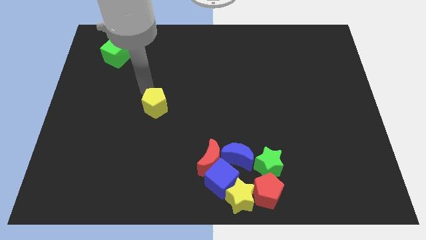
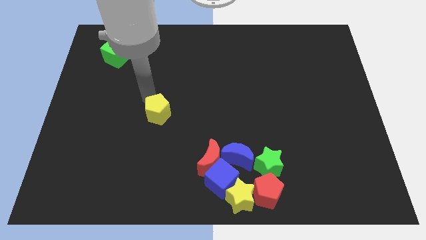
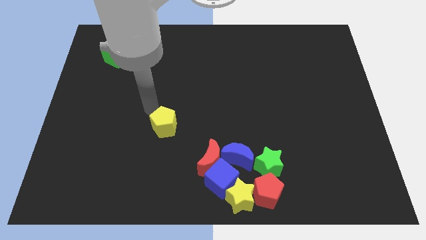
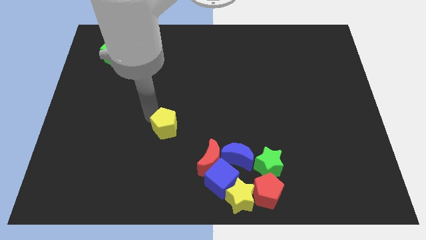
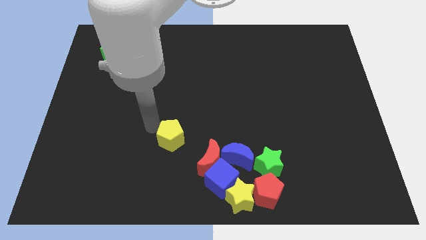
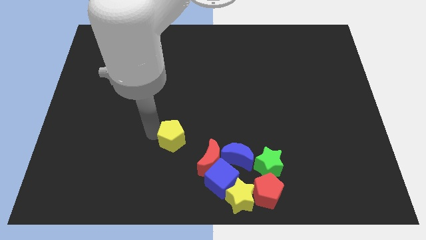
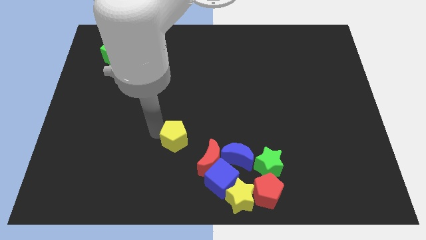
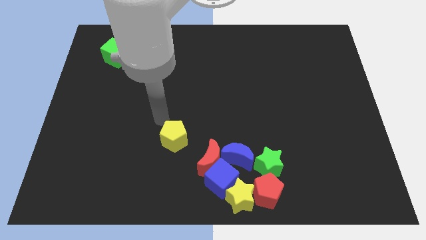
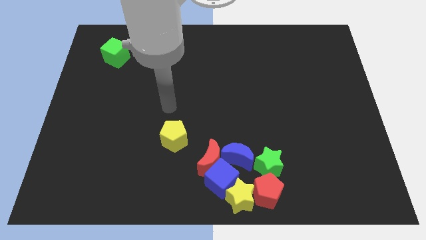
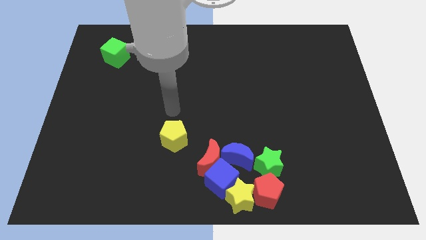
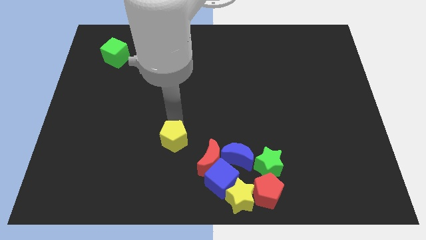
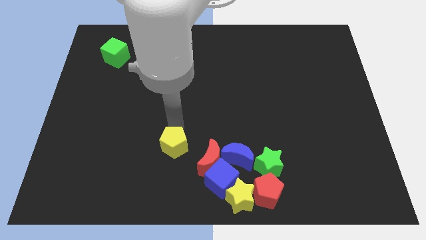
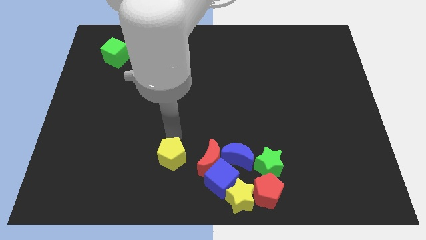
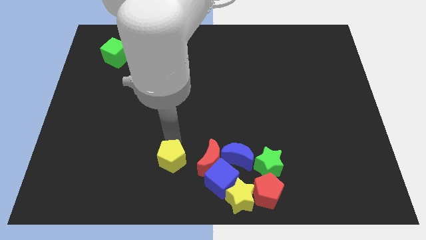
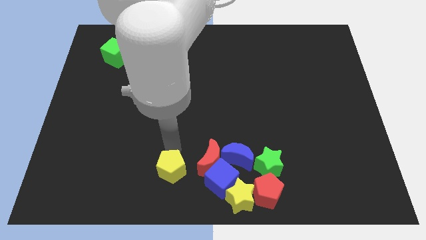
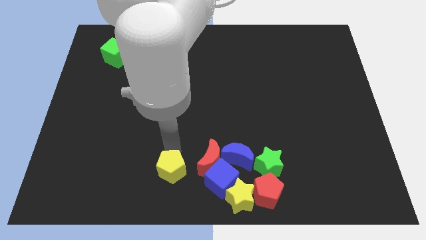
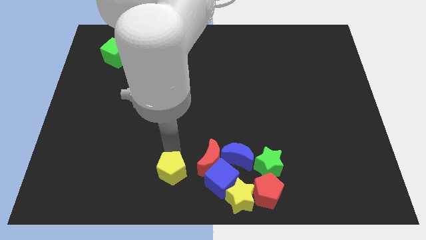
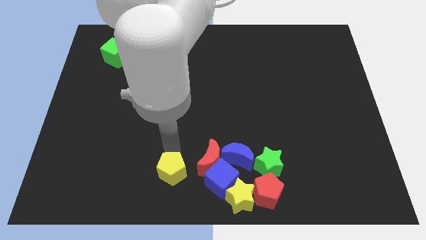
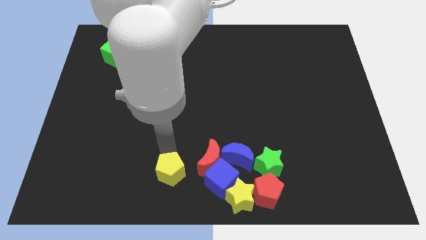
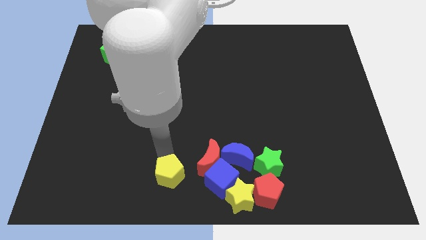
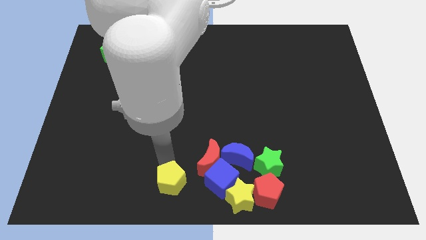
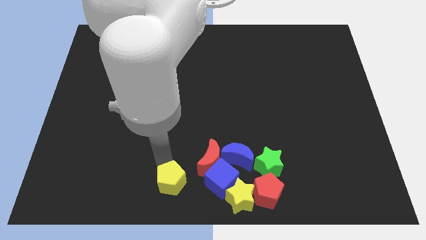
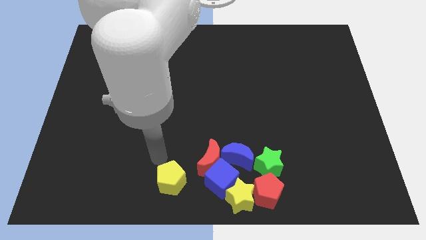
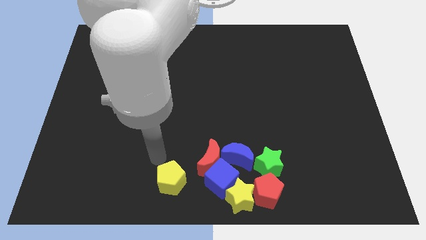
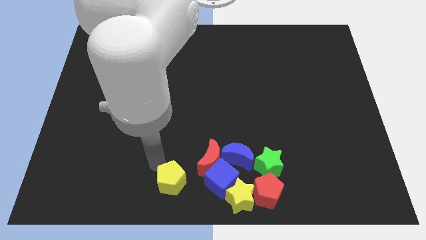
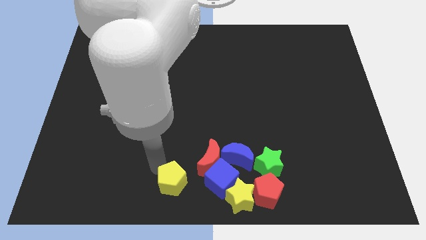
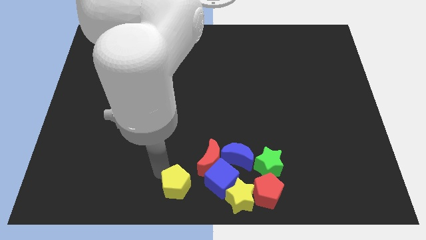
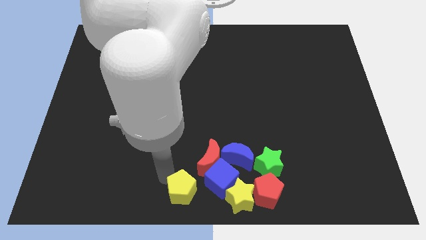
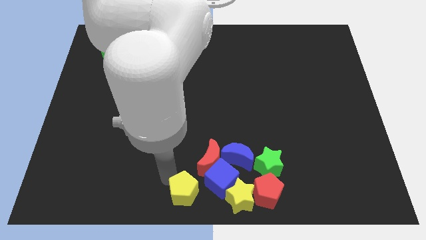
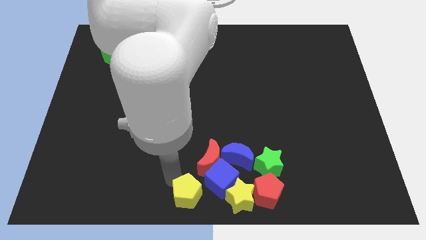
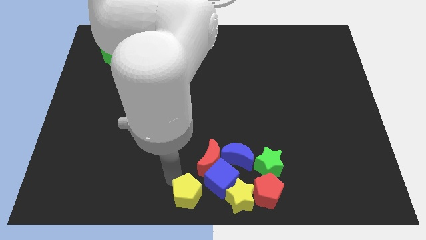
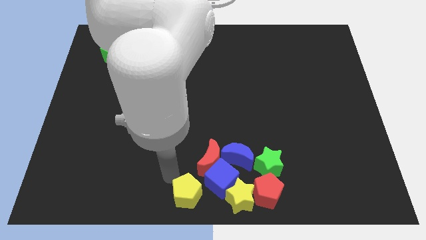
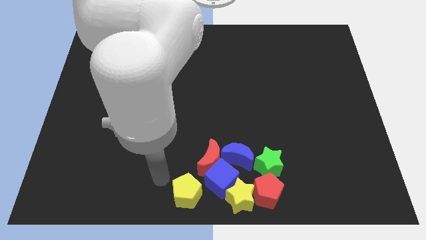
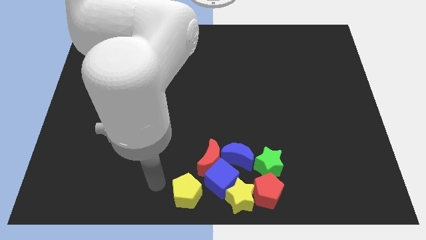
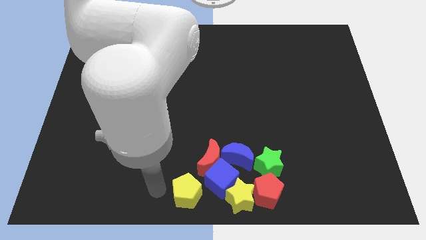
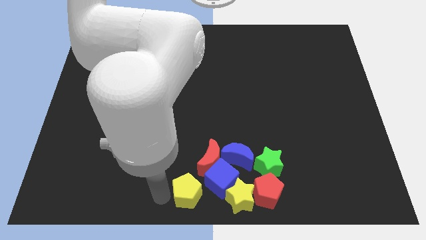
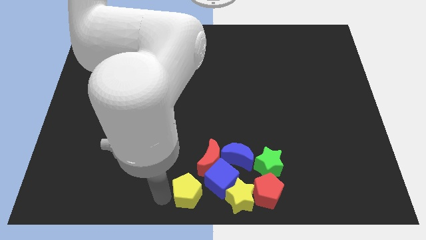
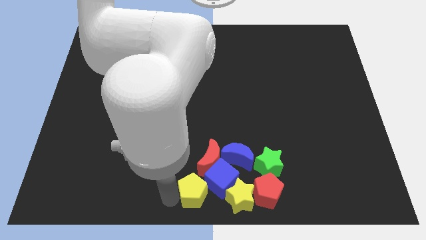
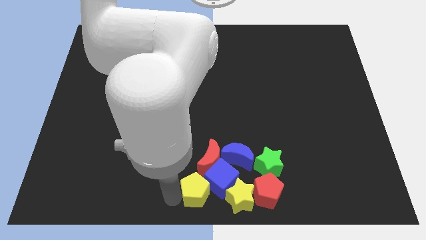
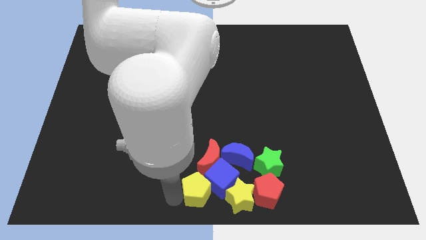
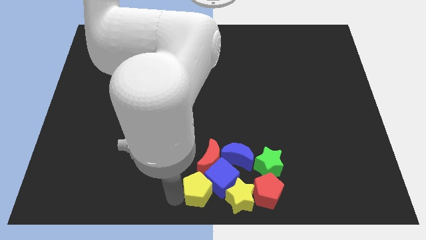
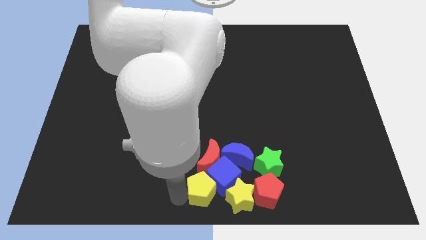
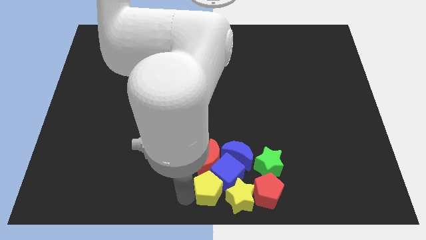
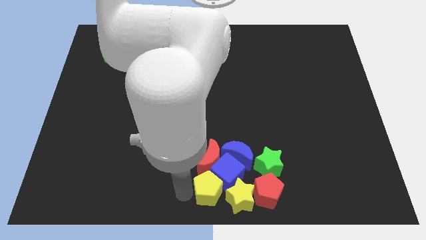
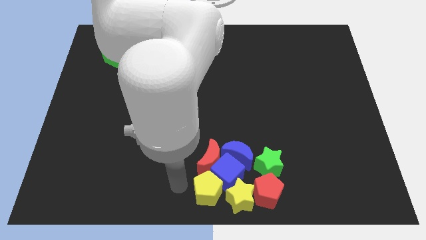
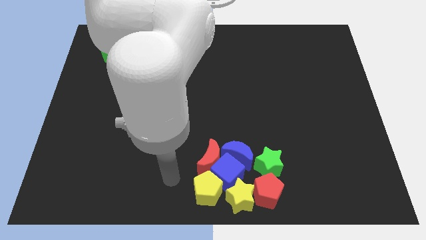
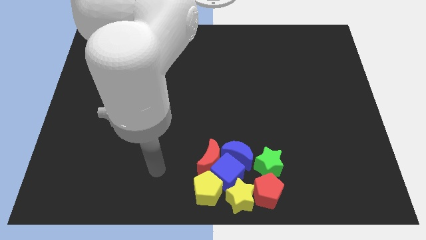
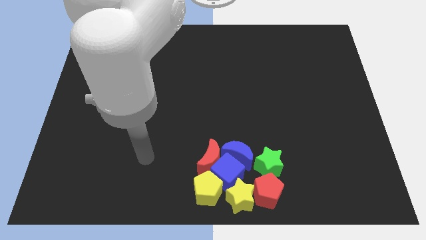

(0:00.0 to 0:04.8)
push the yellow pentagon into the blue cube

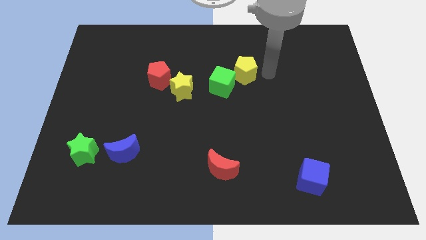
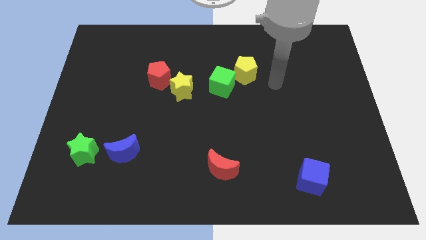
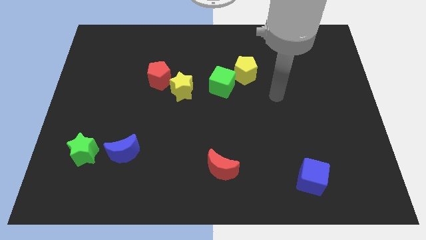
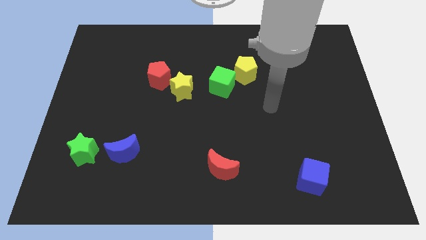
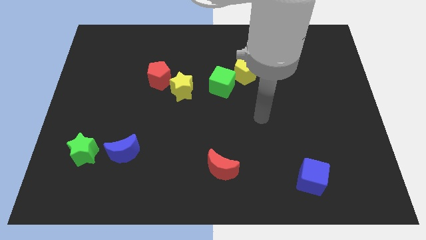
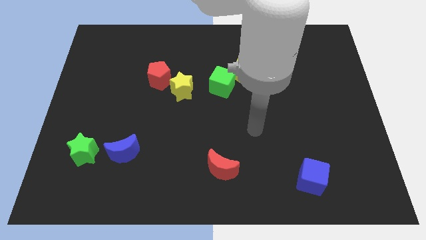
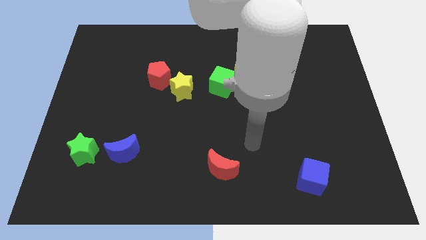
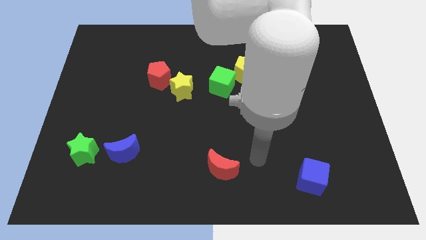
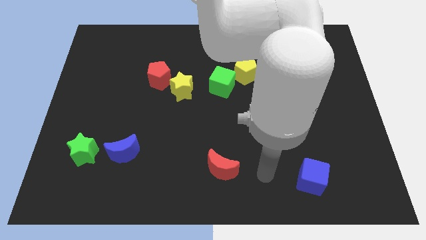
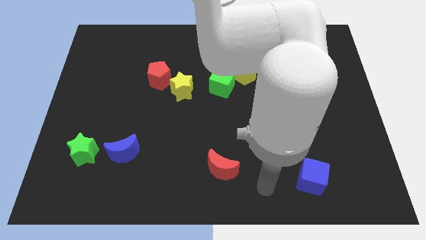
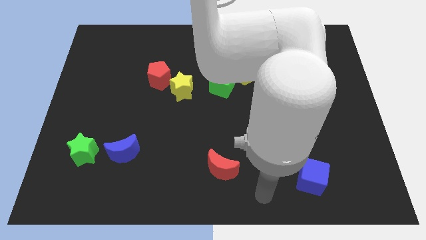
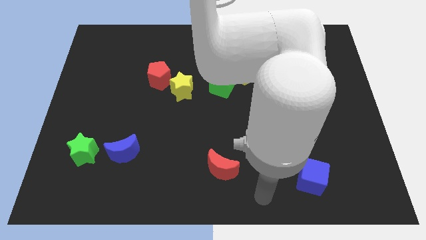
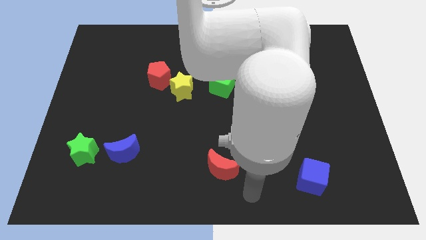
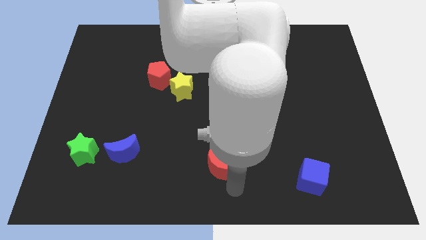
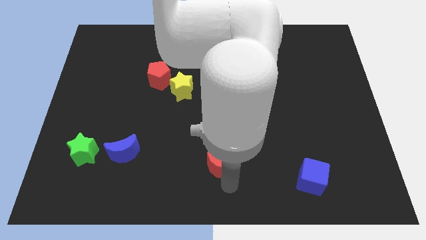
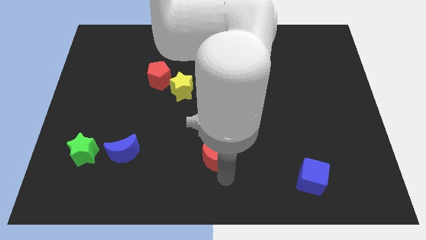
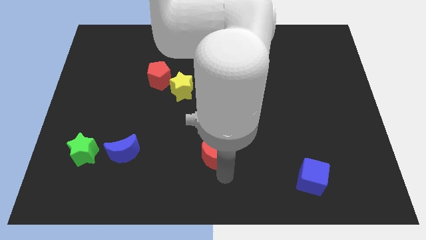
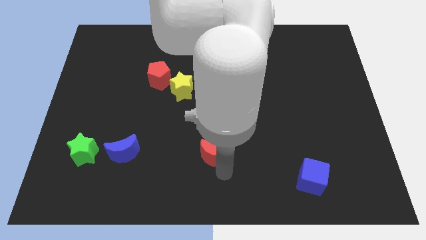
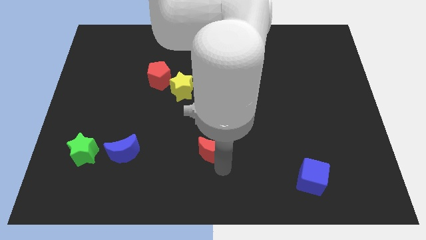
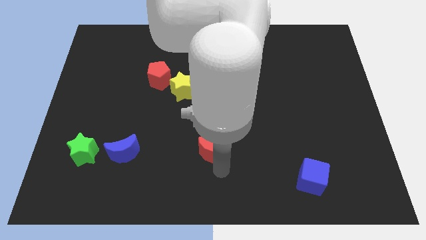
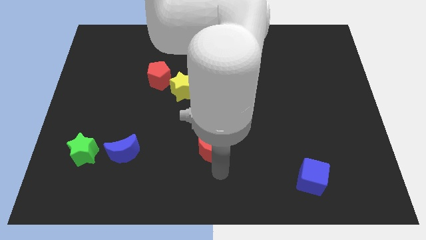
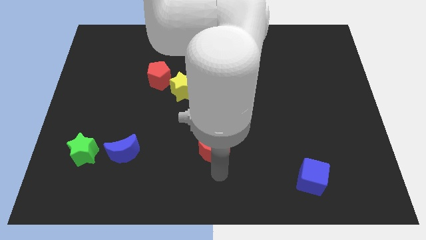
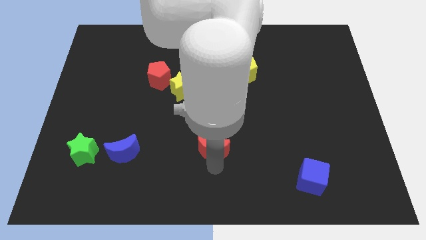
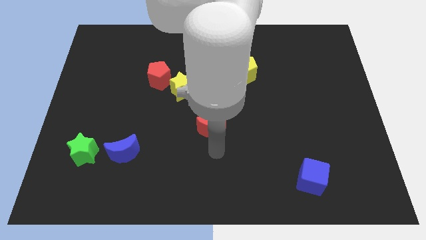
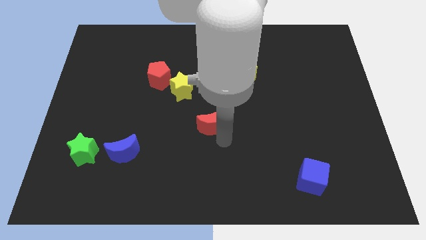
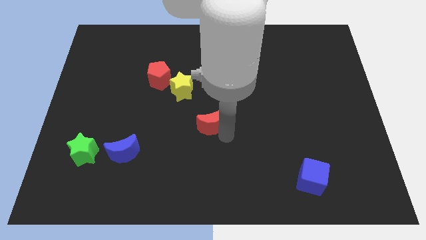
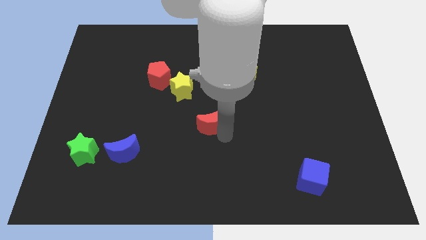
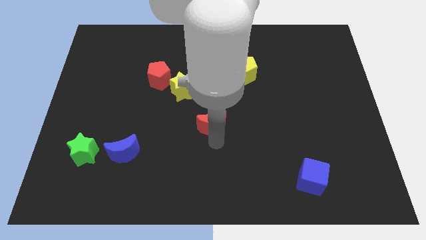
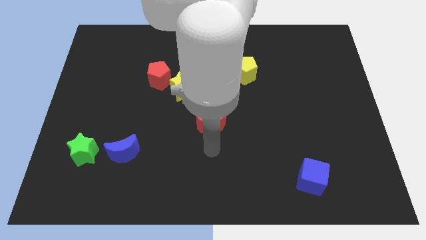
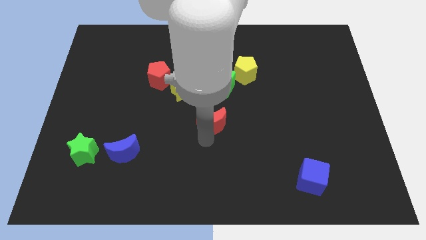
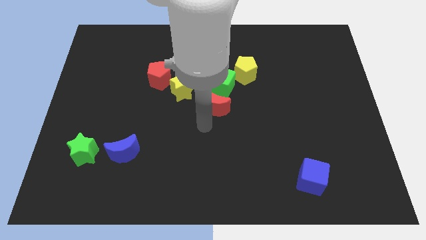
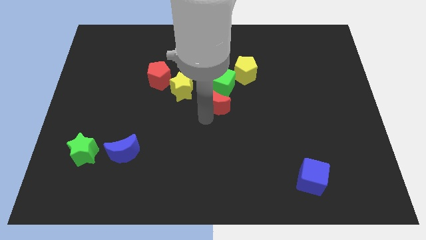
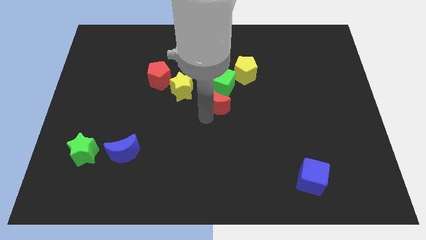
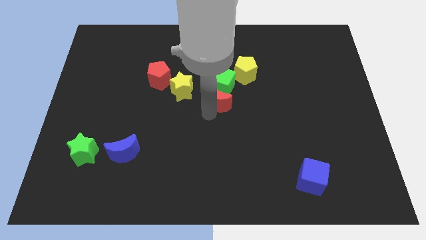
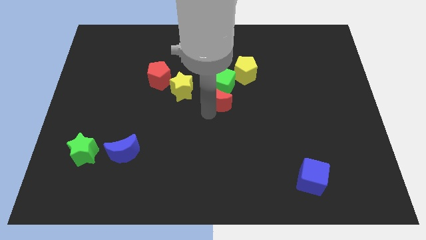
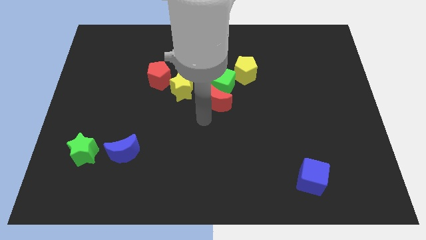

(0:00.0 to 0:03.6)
move the red crescent close to the bottom of the green cube

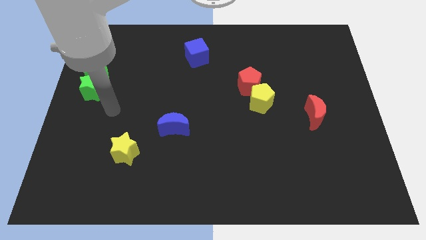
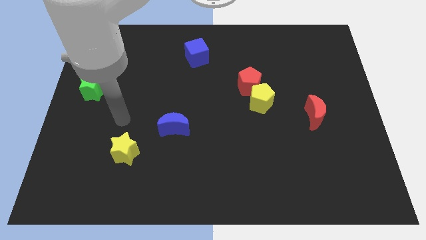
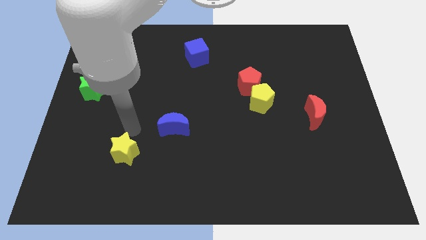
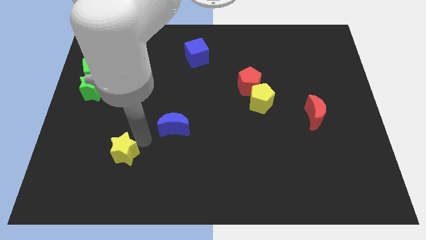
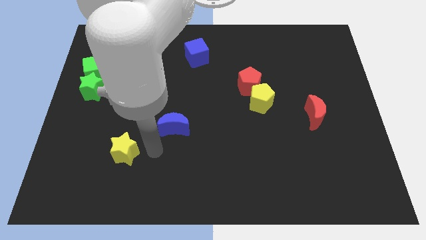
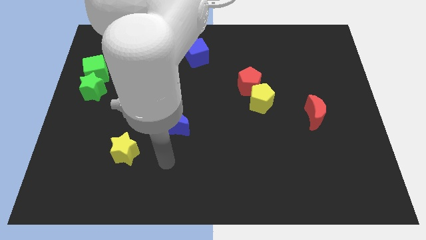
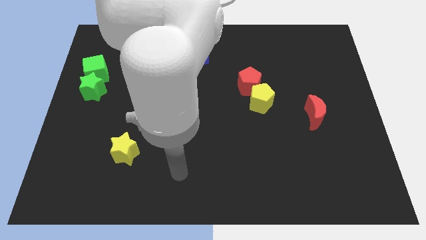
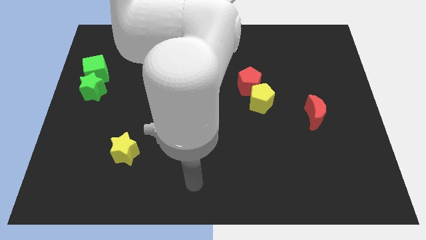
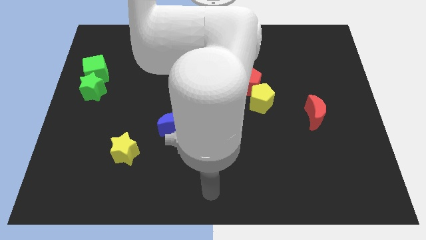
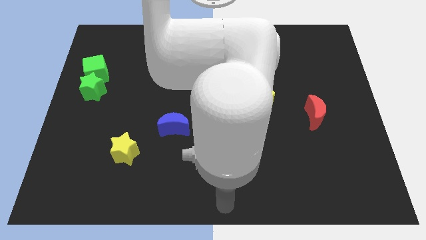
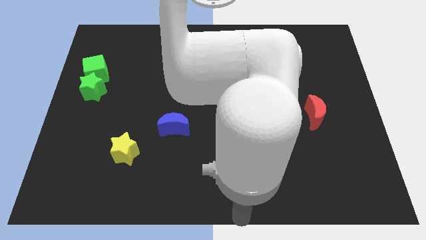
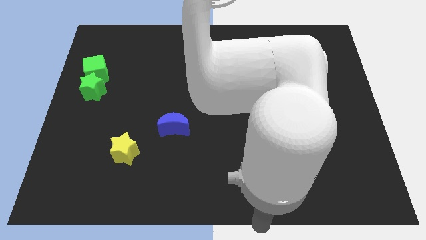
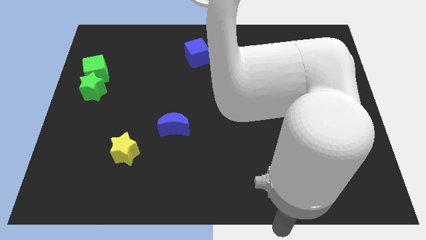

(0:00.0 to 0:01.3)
go to the bottom center of the board
